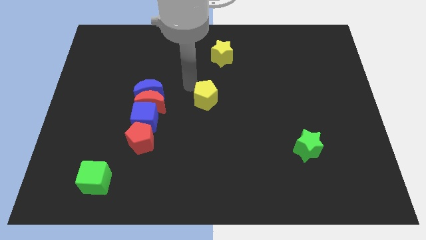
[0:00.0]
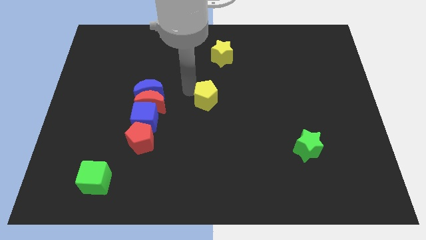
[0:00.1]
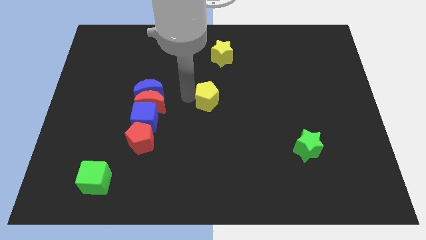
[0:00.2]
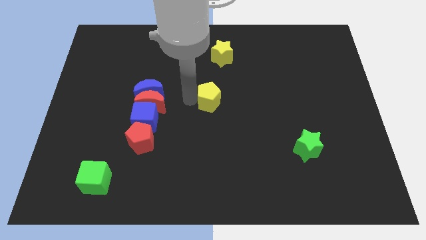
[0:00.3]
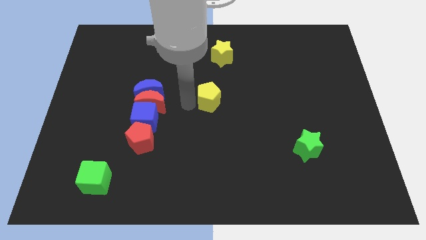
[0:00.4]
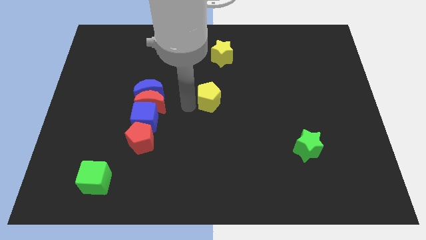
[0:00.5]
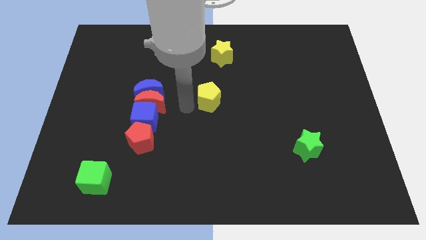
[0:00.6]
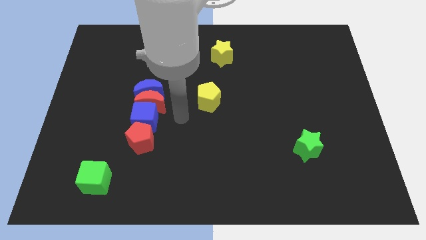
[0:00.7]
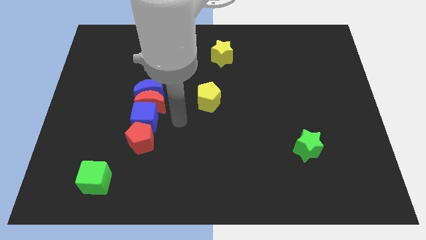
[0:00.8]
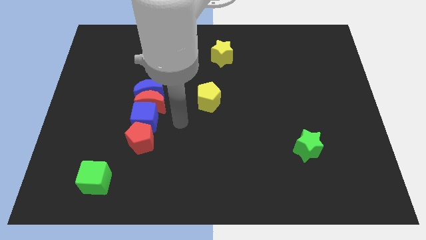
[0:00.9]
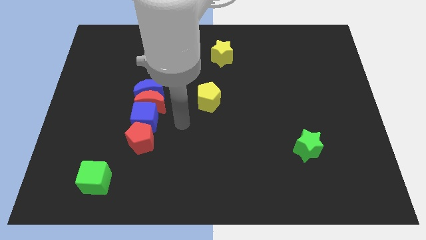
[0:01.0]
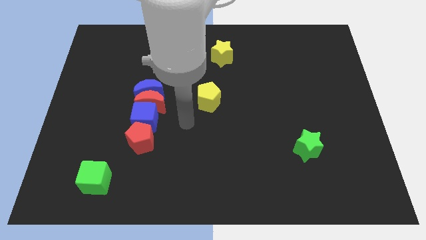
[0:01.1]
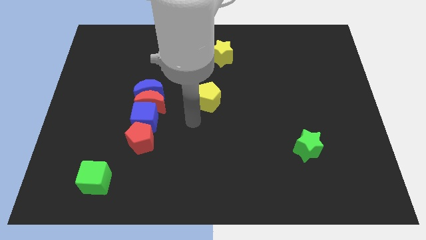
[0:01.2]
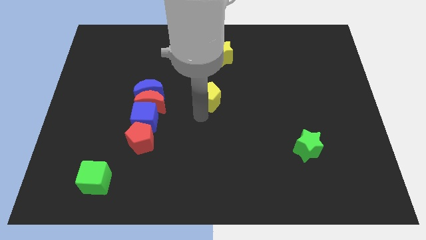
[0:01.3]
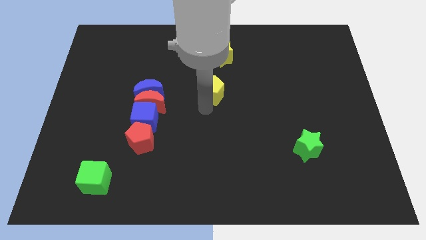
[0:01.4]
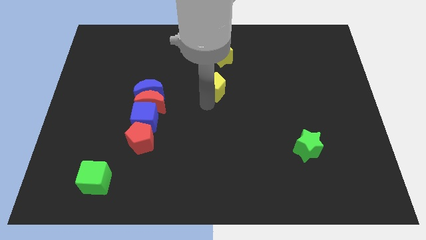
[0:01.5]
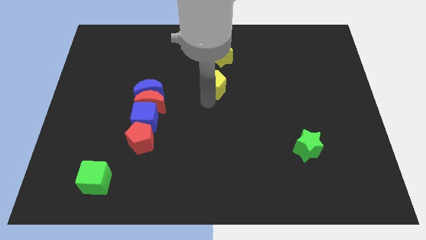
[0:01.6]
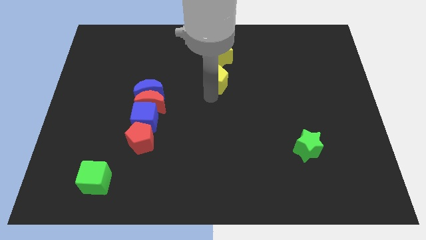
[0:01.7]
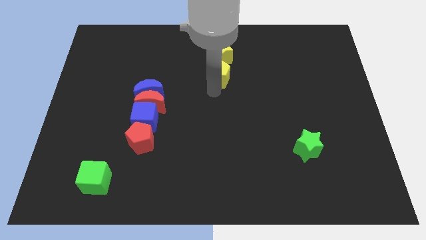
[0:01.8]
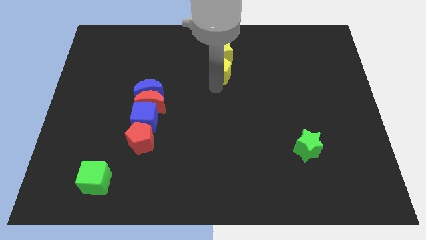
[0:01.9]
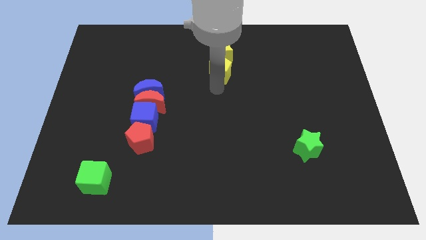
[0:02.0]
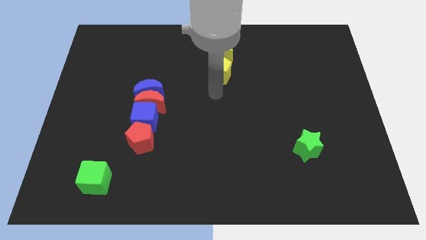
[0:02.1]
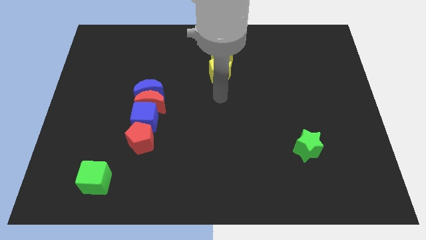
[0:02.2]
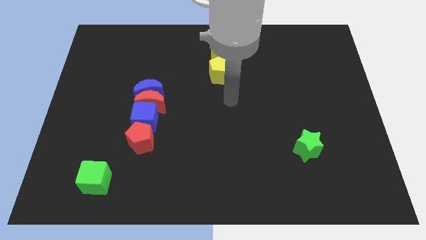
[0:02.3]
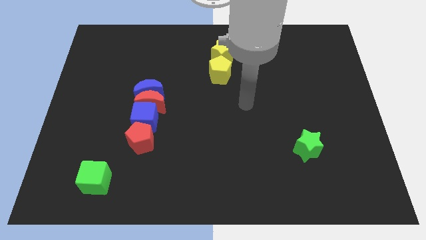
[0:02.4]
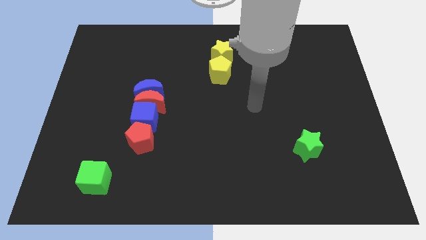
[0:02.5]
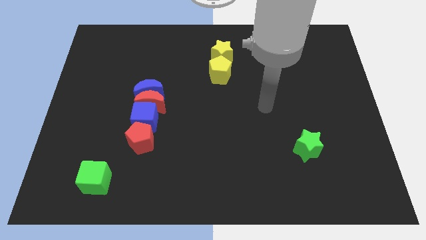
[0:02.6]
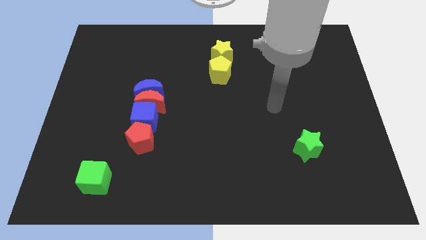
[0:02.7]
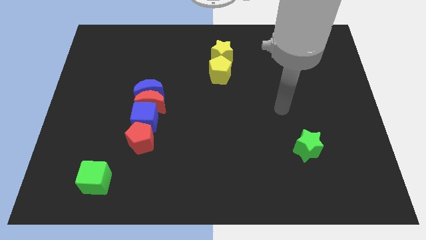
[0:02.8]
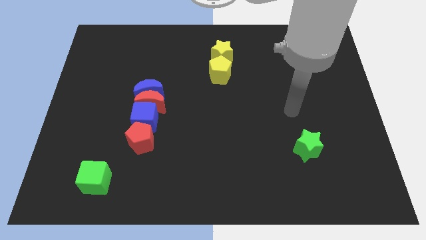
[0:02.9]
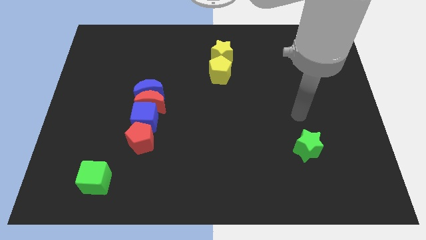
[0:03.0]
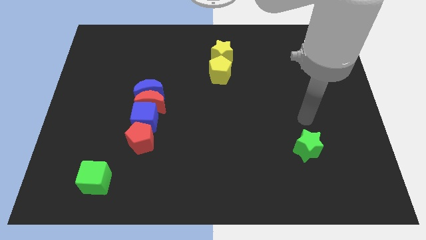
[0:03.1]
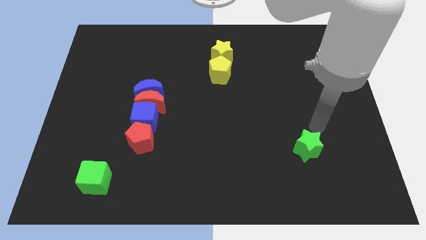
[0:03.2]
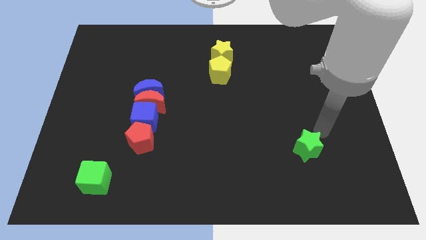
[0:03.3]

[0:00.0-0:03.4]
place the yellow pentagon at the bottom of the yellow star

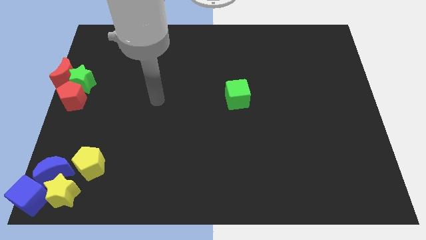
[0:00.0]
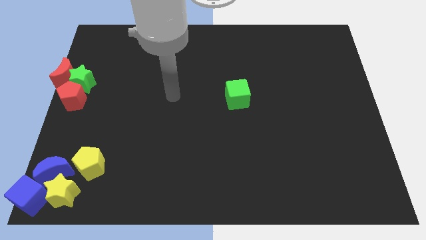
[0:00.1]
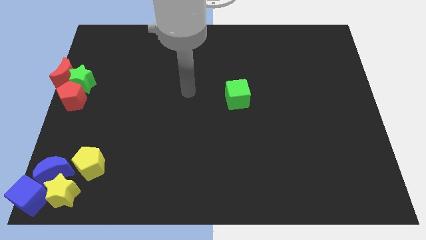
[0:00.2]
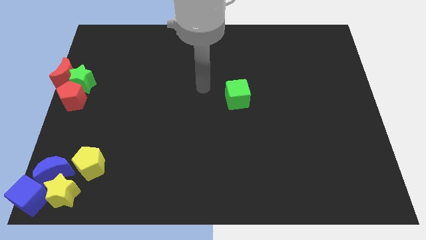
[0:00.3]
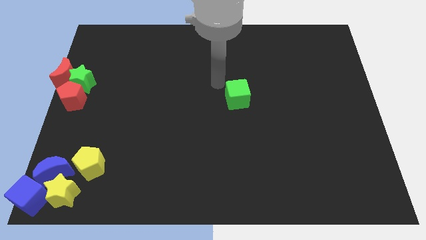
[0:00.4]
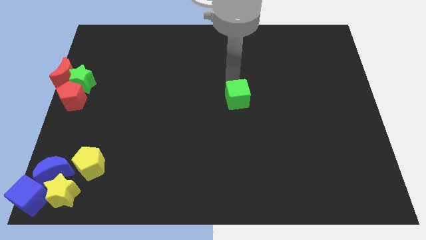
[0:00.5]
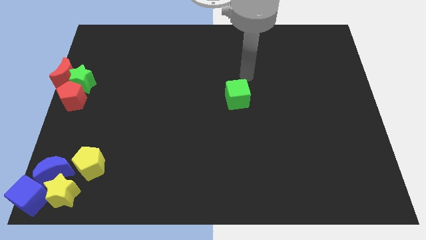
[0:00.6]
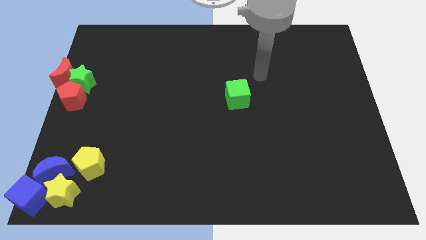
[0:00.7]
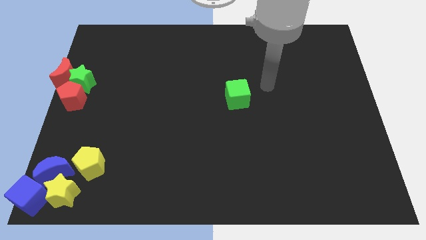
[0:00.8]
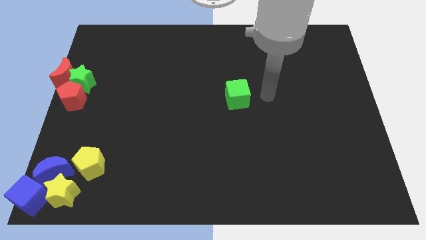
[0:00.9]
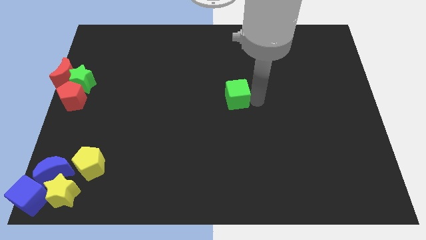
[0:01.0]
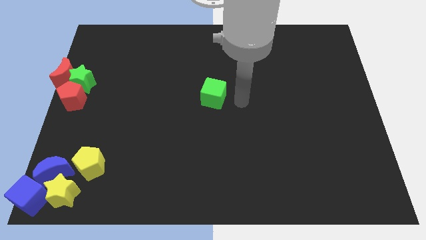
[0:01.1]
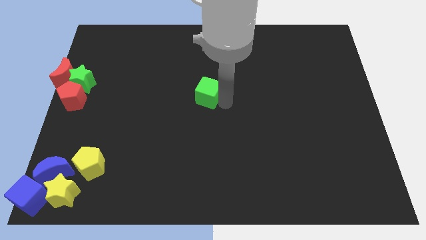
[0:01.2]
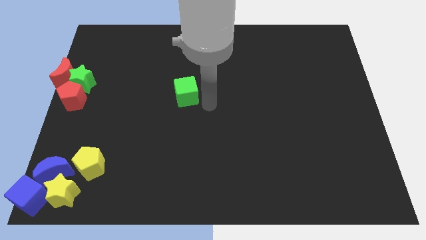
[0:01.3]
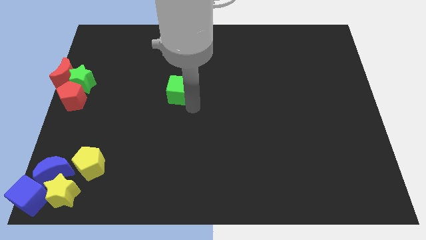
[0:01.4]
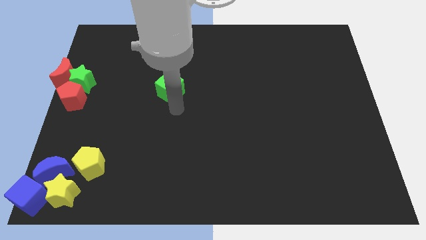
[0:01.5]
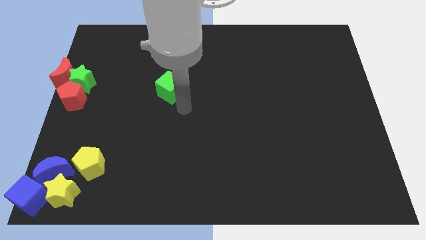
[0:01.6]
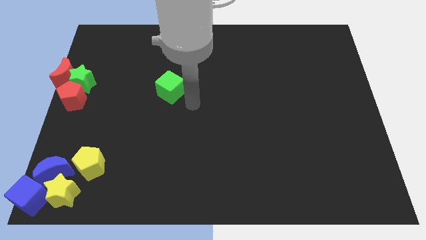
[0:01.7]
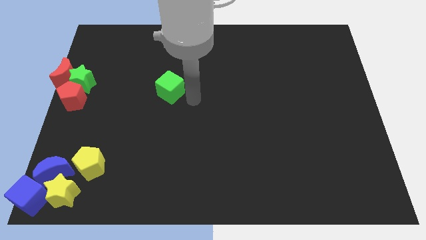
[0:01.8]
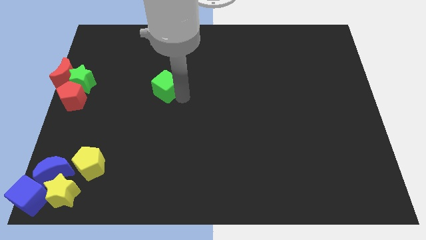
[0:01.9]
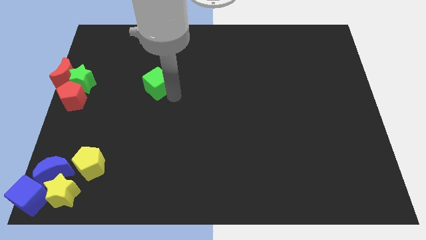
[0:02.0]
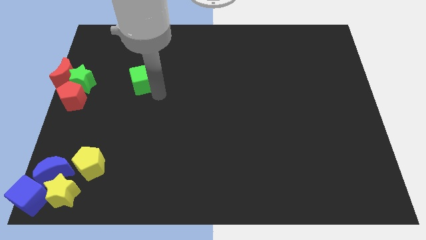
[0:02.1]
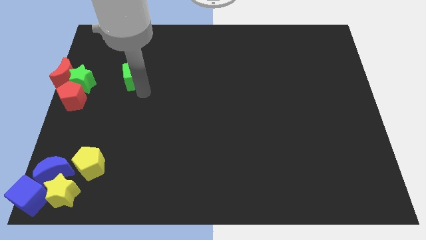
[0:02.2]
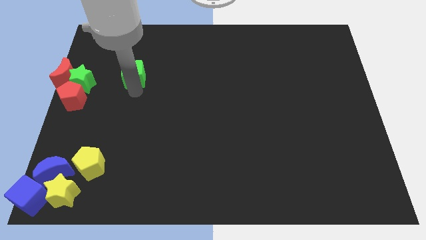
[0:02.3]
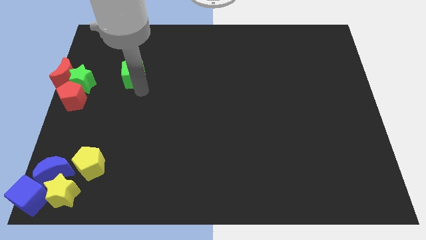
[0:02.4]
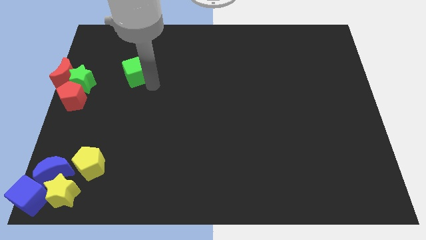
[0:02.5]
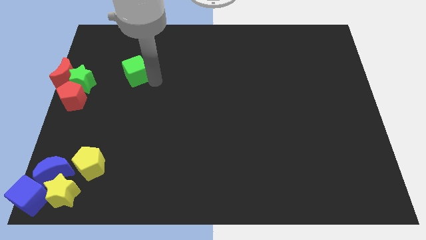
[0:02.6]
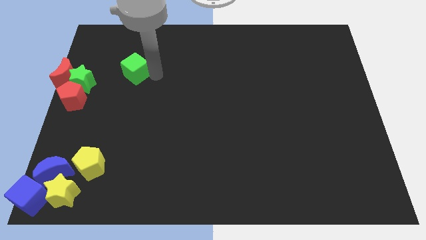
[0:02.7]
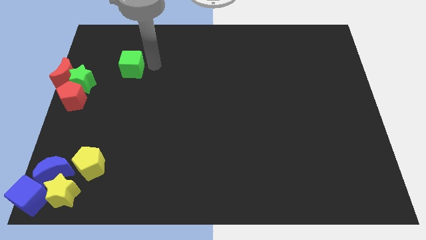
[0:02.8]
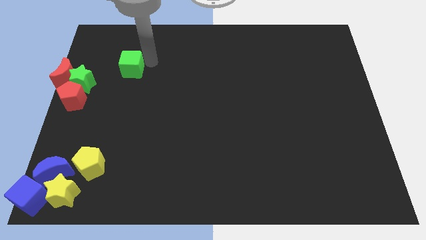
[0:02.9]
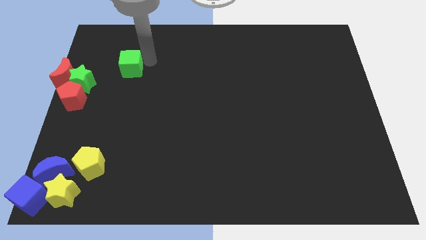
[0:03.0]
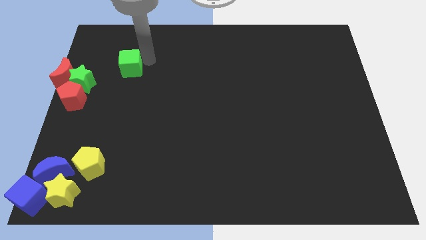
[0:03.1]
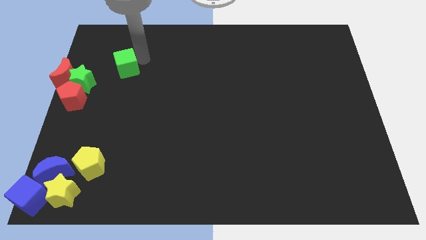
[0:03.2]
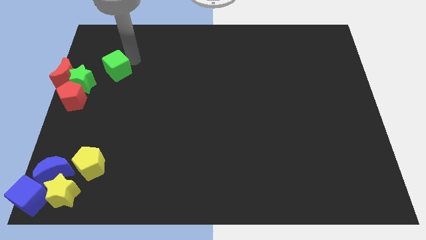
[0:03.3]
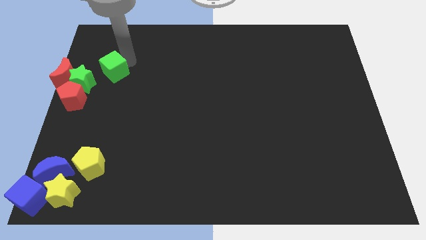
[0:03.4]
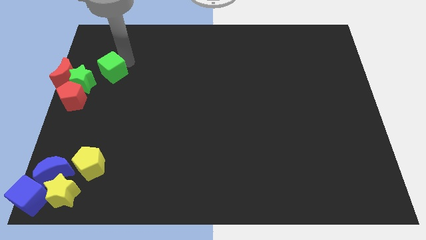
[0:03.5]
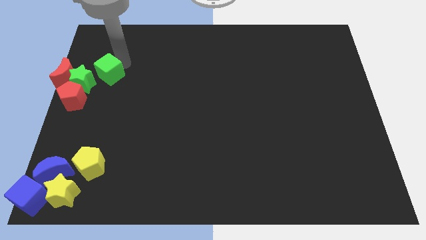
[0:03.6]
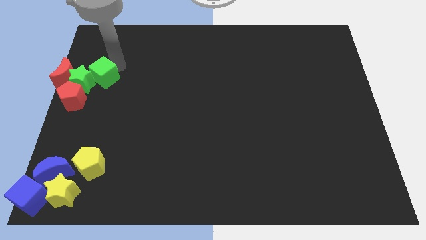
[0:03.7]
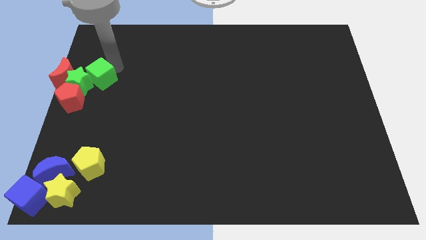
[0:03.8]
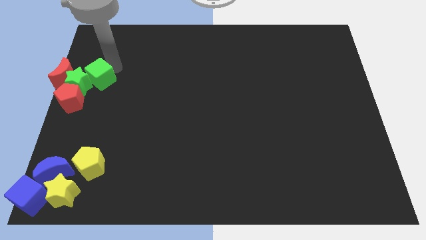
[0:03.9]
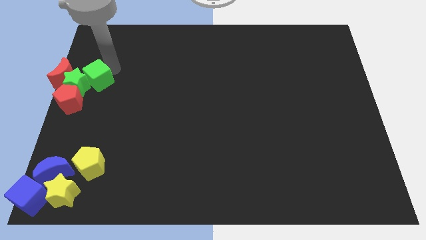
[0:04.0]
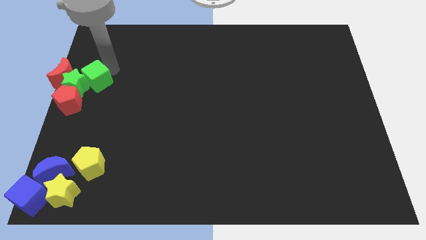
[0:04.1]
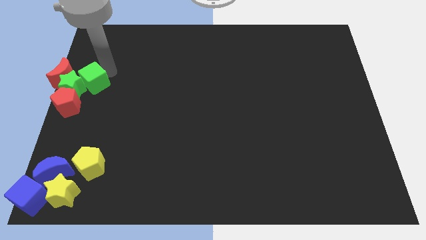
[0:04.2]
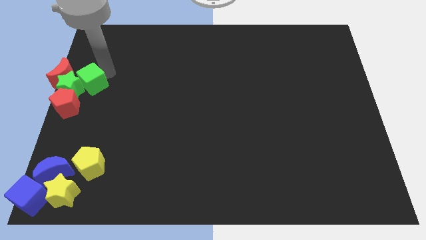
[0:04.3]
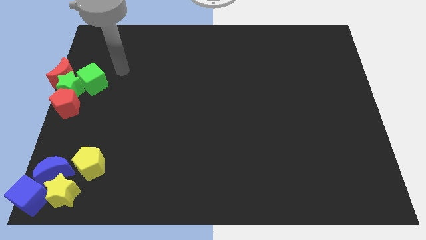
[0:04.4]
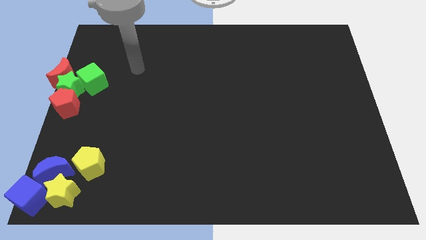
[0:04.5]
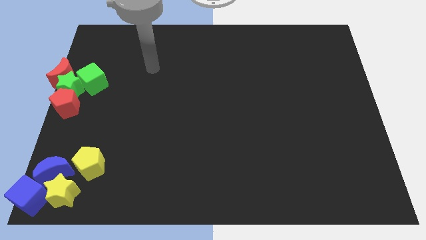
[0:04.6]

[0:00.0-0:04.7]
move the green cube to the right of the green star

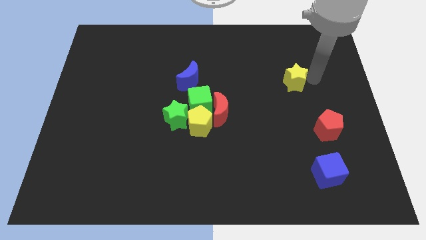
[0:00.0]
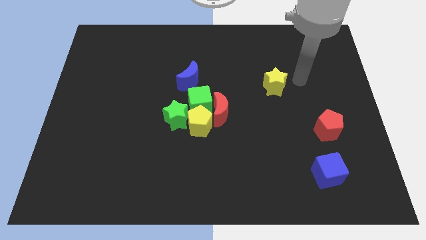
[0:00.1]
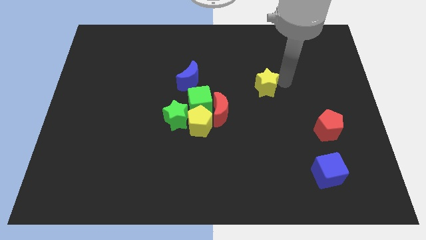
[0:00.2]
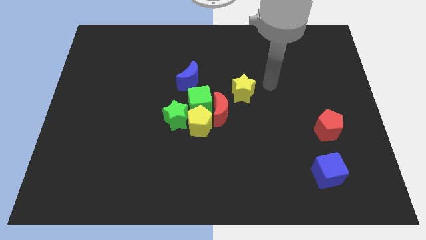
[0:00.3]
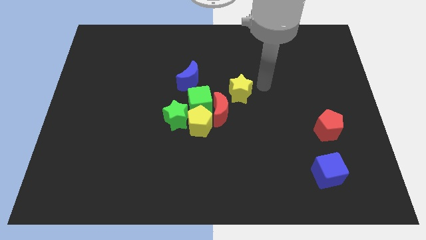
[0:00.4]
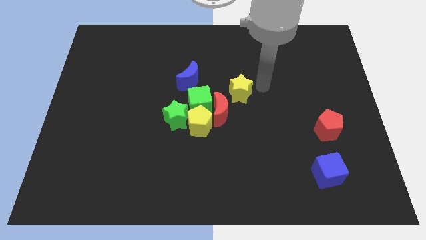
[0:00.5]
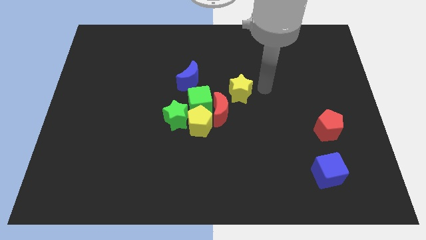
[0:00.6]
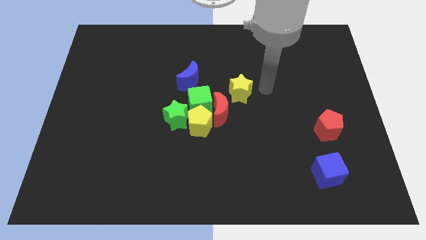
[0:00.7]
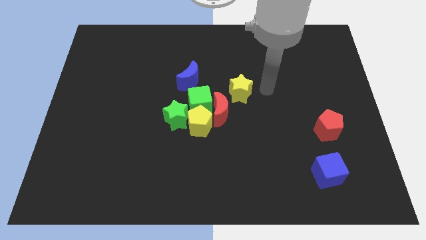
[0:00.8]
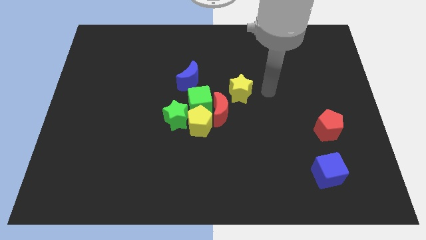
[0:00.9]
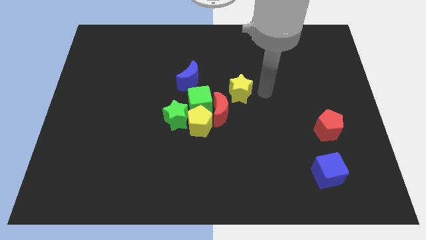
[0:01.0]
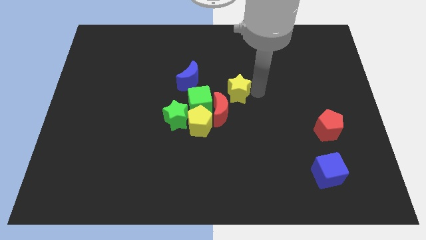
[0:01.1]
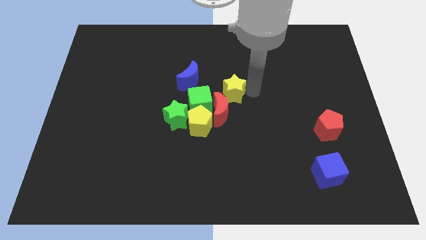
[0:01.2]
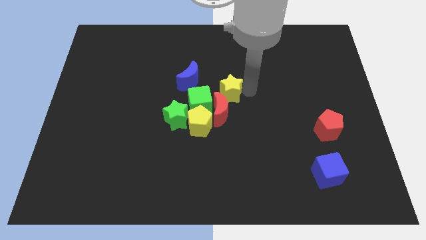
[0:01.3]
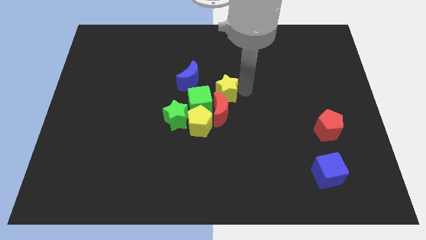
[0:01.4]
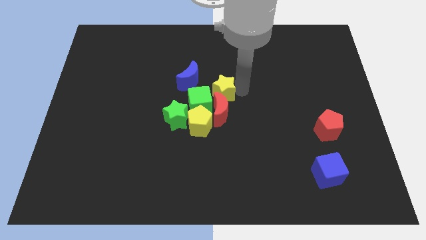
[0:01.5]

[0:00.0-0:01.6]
push the yellow star close to the group of blocks
